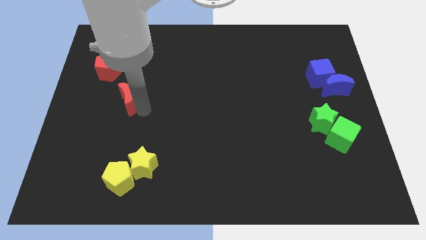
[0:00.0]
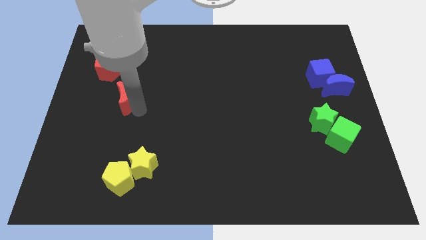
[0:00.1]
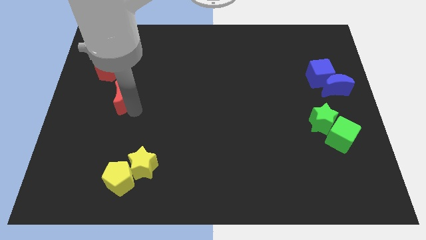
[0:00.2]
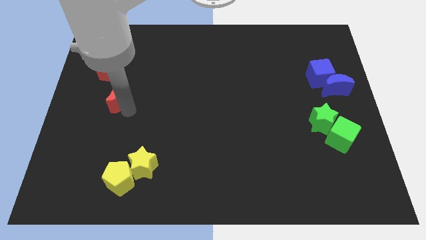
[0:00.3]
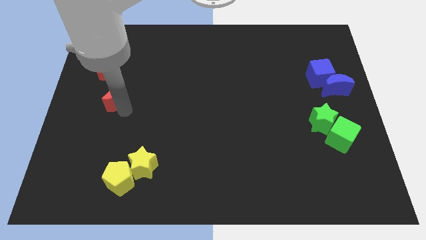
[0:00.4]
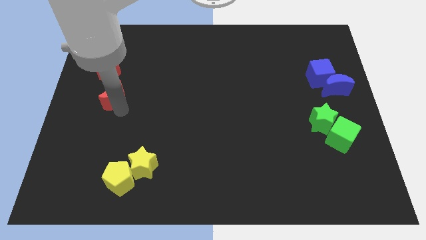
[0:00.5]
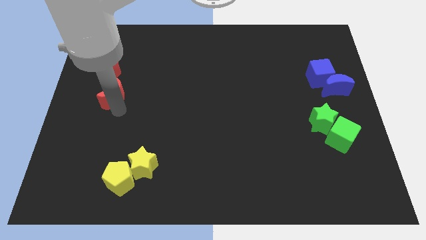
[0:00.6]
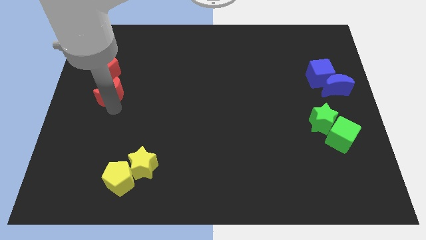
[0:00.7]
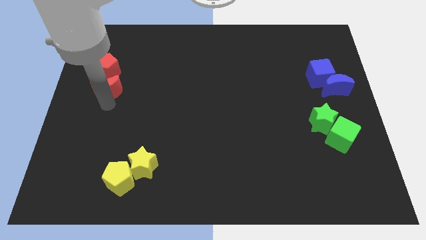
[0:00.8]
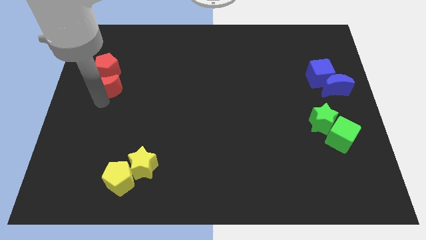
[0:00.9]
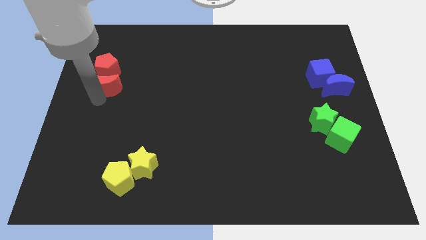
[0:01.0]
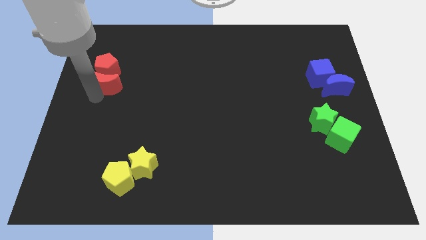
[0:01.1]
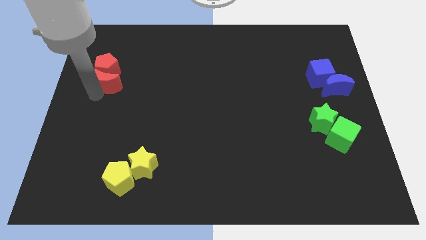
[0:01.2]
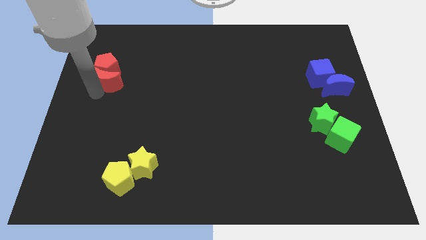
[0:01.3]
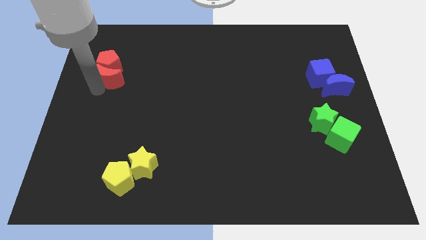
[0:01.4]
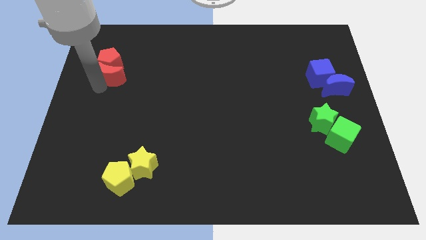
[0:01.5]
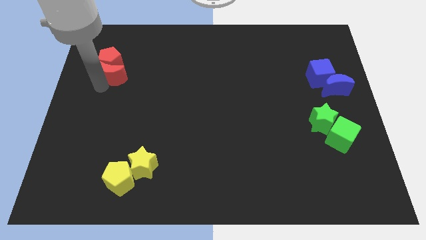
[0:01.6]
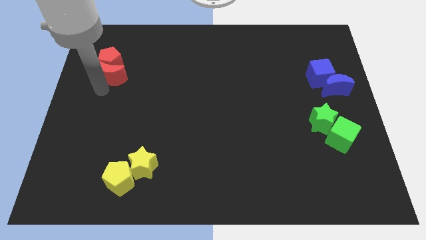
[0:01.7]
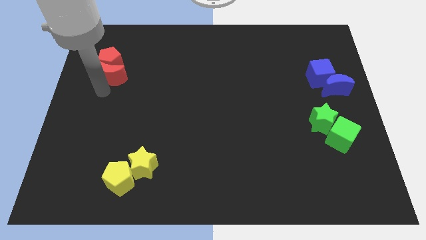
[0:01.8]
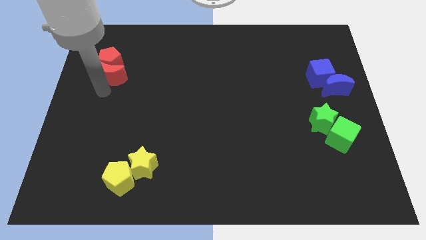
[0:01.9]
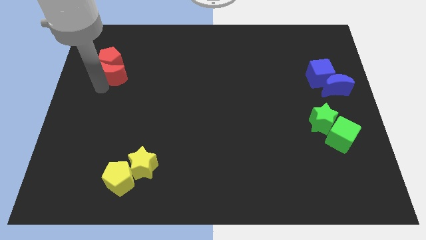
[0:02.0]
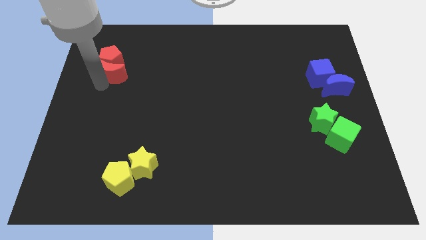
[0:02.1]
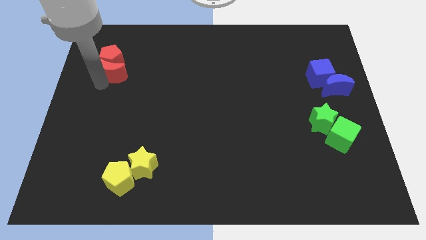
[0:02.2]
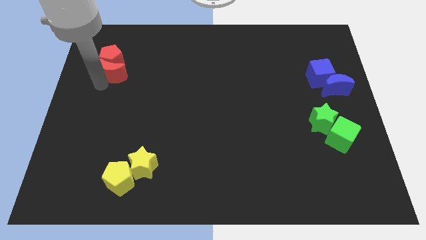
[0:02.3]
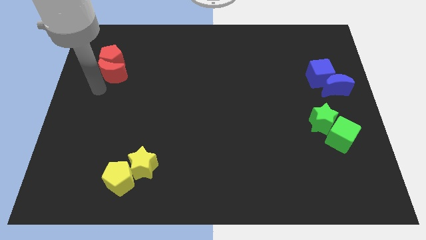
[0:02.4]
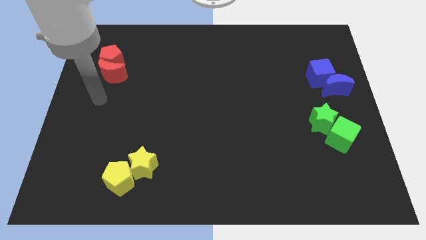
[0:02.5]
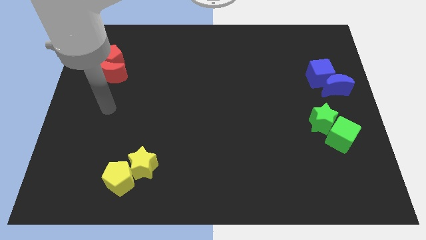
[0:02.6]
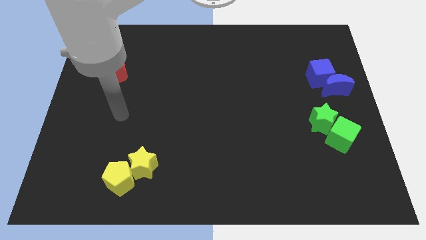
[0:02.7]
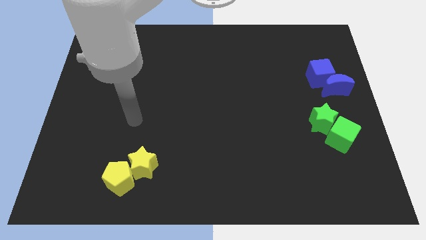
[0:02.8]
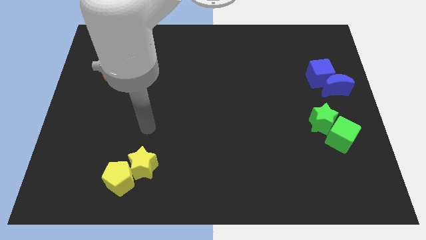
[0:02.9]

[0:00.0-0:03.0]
push the red blocks slightly to the top

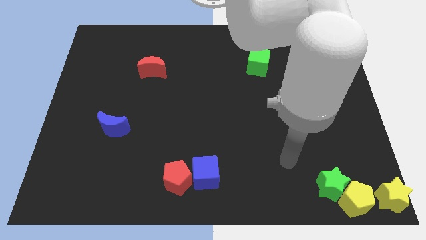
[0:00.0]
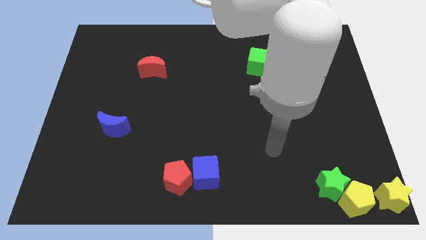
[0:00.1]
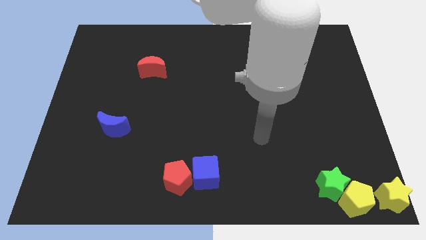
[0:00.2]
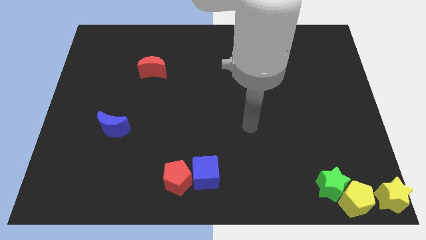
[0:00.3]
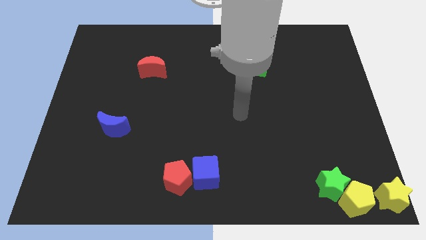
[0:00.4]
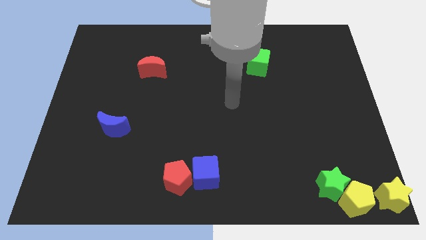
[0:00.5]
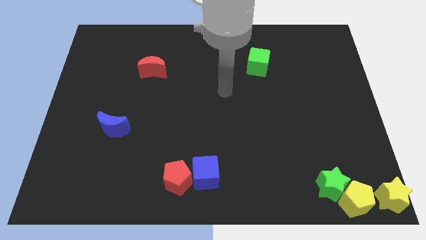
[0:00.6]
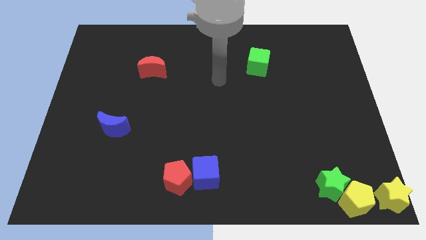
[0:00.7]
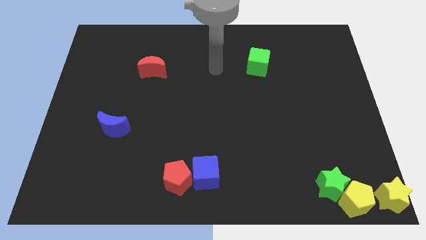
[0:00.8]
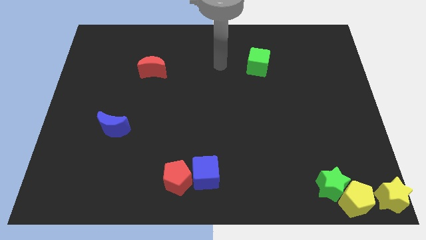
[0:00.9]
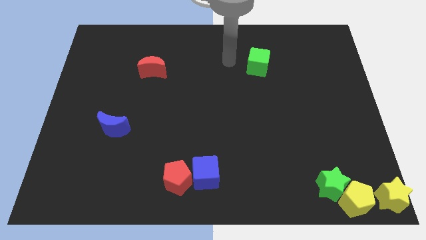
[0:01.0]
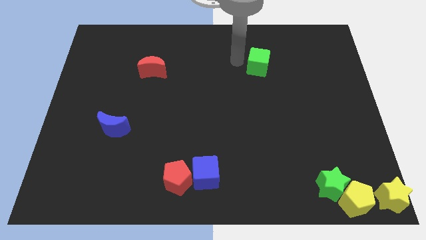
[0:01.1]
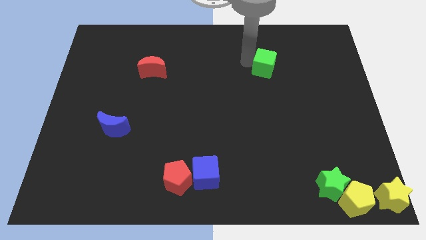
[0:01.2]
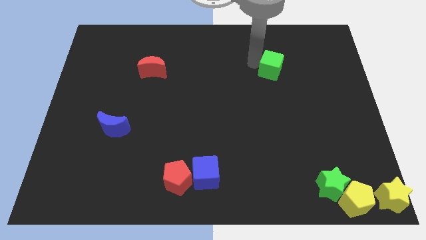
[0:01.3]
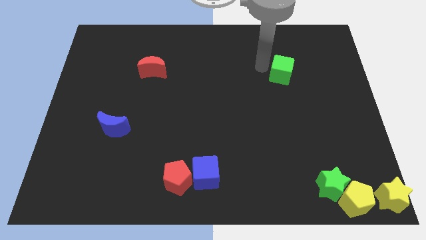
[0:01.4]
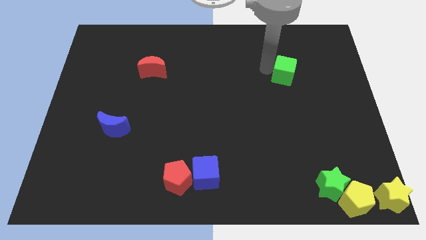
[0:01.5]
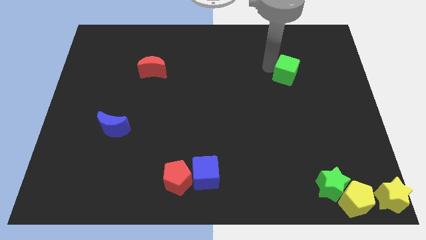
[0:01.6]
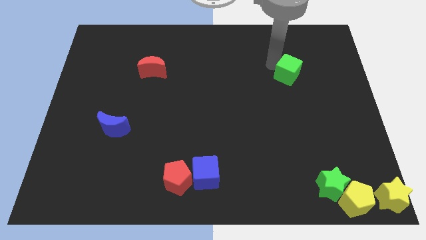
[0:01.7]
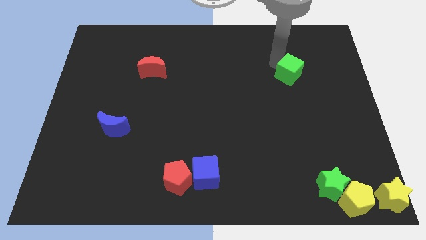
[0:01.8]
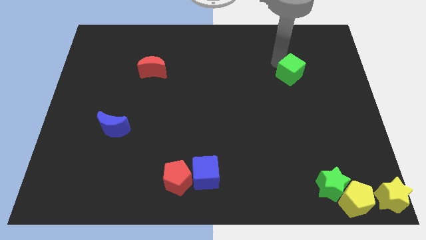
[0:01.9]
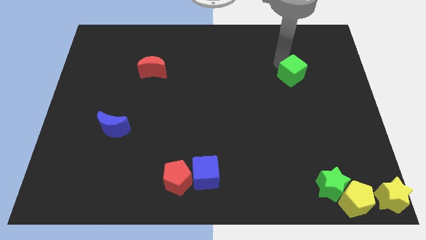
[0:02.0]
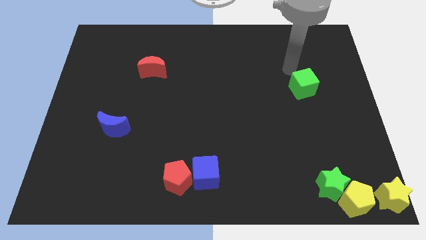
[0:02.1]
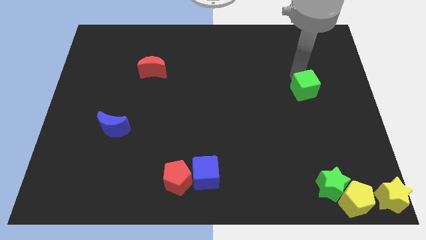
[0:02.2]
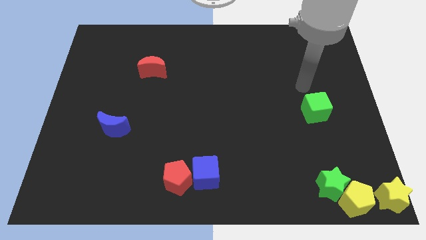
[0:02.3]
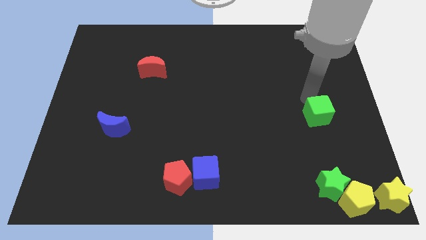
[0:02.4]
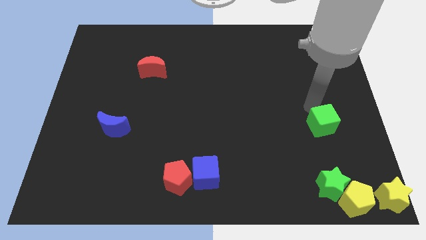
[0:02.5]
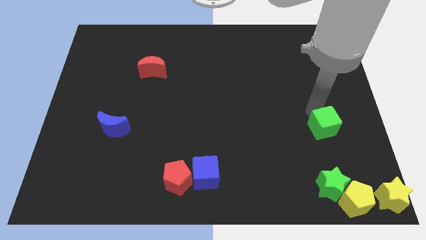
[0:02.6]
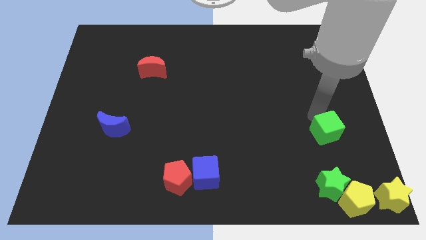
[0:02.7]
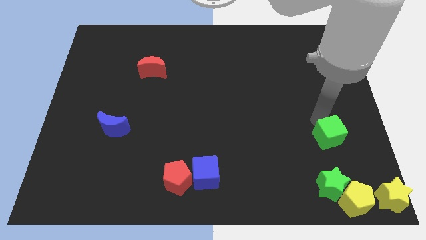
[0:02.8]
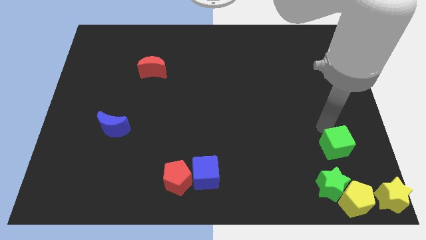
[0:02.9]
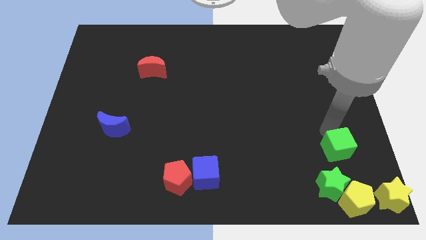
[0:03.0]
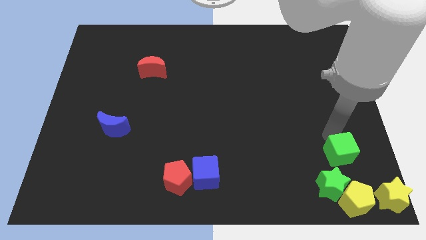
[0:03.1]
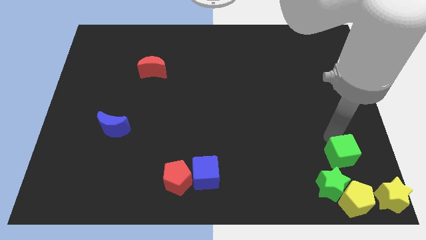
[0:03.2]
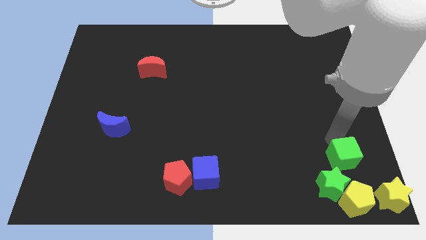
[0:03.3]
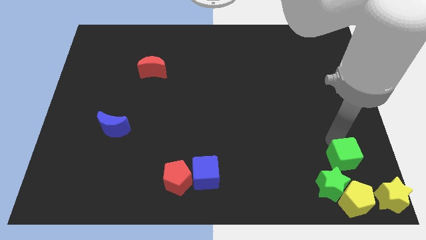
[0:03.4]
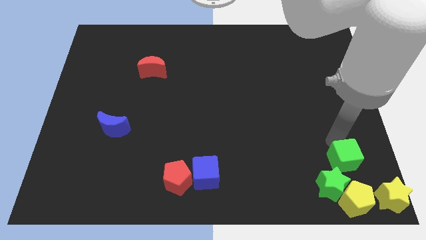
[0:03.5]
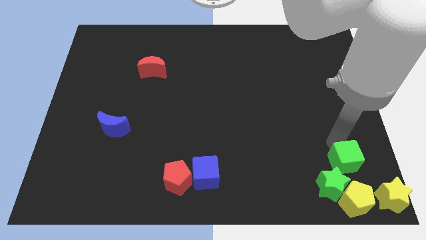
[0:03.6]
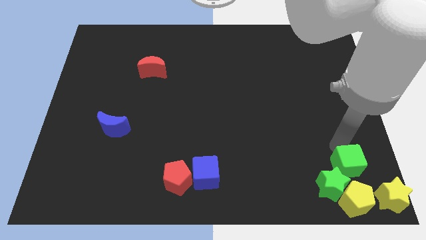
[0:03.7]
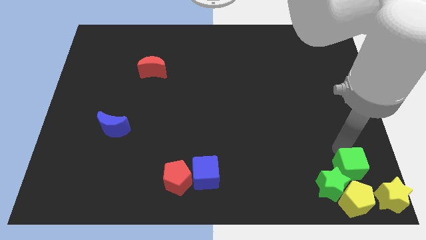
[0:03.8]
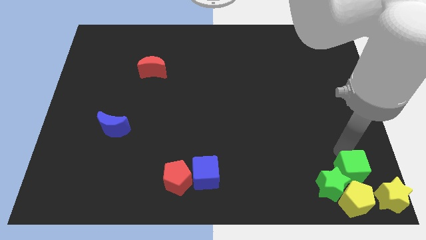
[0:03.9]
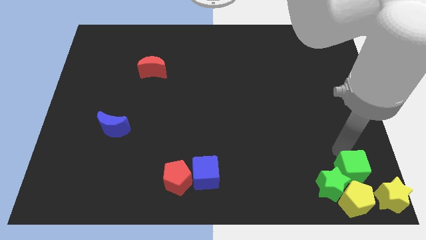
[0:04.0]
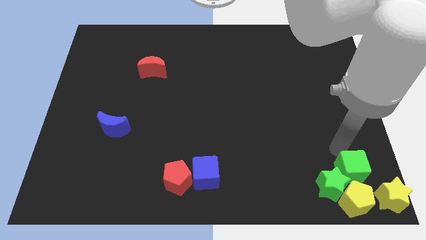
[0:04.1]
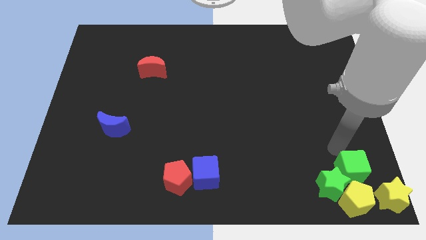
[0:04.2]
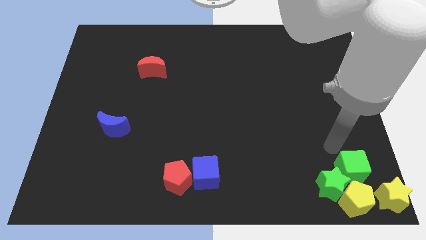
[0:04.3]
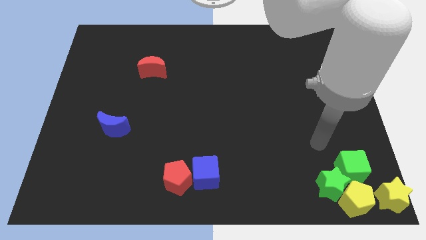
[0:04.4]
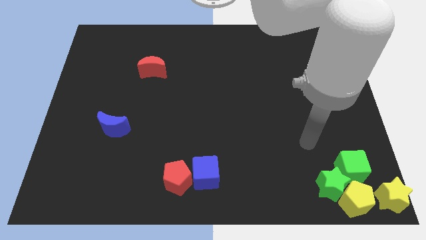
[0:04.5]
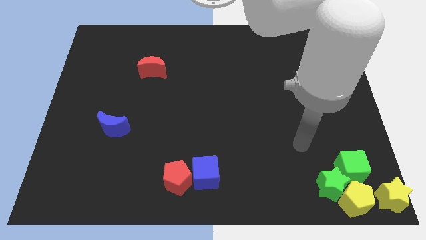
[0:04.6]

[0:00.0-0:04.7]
place the green cube to the top right of the green star

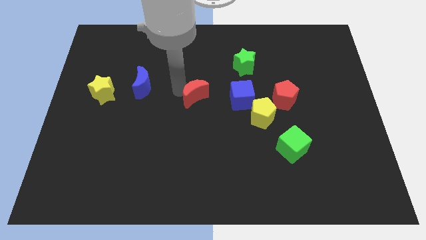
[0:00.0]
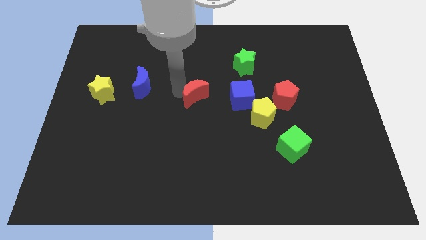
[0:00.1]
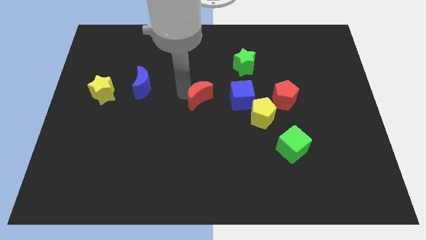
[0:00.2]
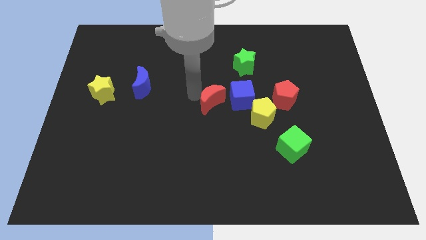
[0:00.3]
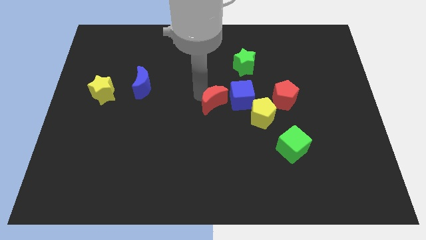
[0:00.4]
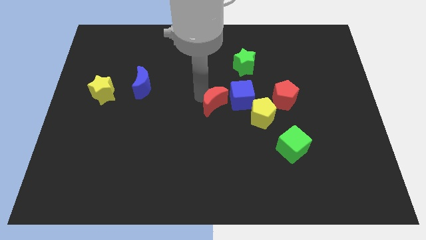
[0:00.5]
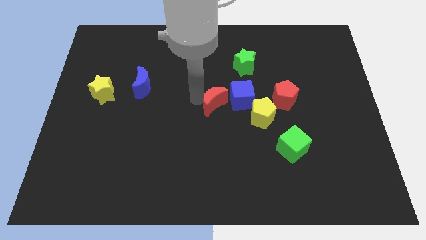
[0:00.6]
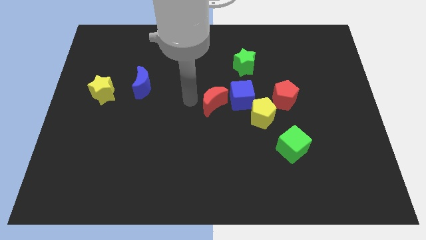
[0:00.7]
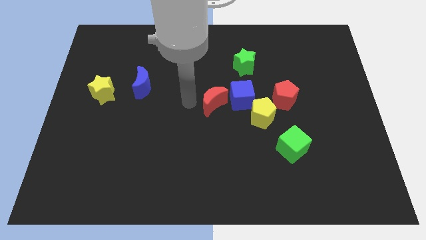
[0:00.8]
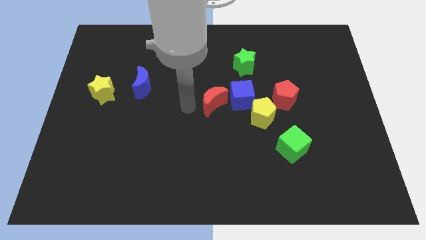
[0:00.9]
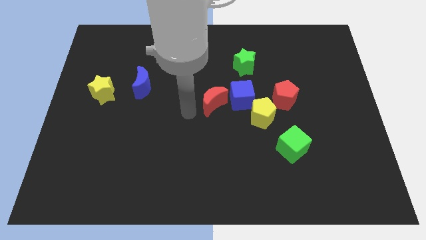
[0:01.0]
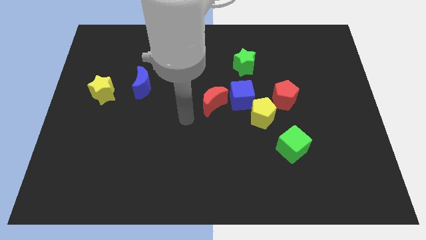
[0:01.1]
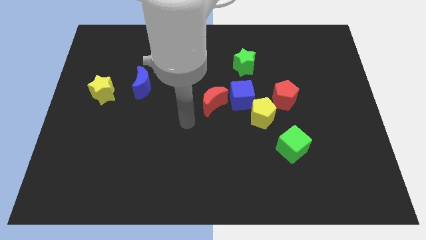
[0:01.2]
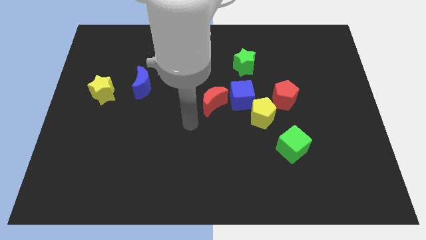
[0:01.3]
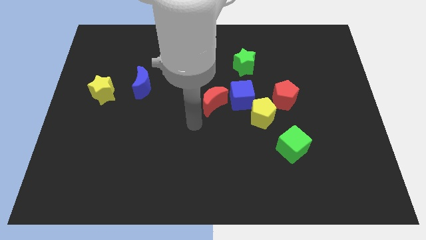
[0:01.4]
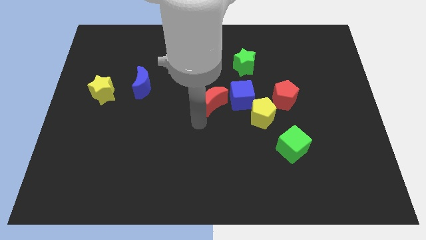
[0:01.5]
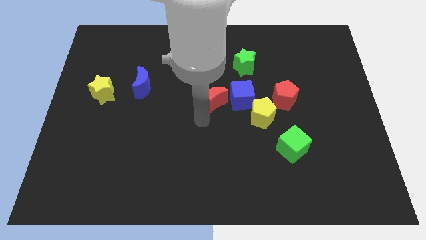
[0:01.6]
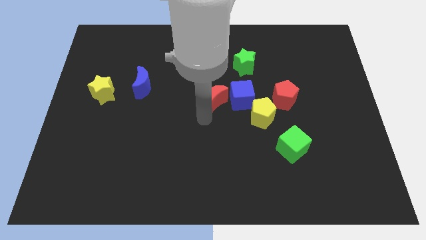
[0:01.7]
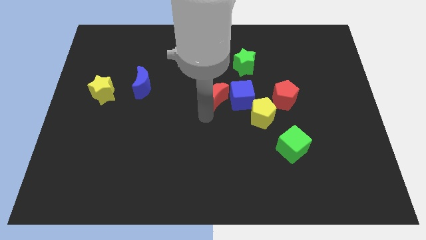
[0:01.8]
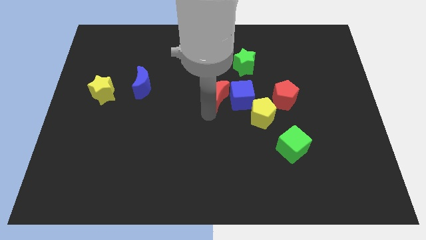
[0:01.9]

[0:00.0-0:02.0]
move the red crescent into the blue cube
